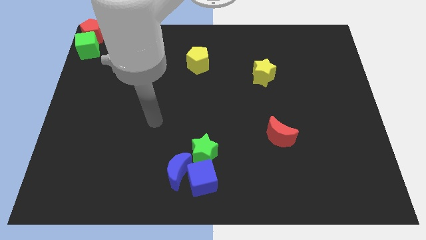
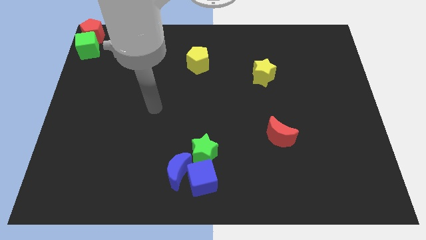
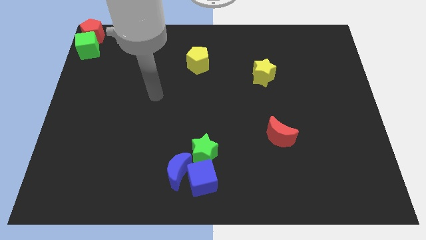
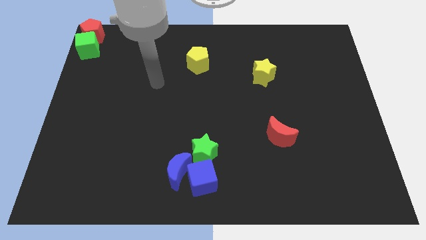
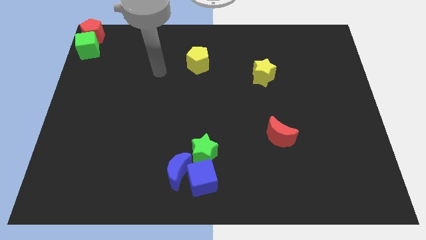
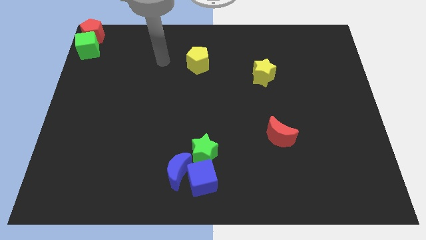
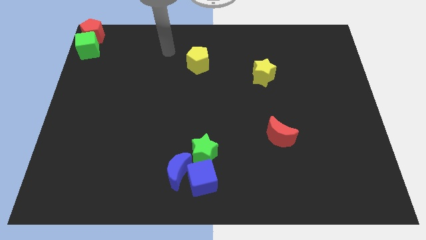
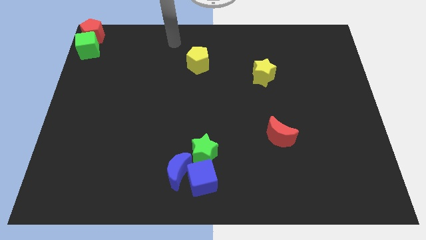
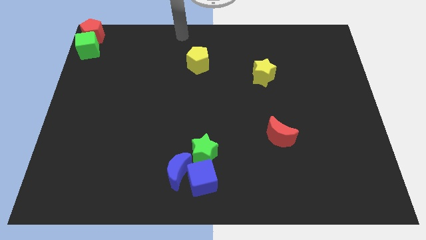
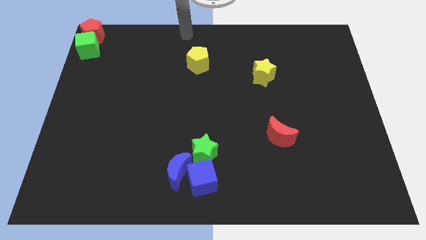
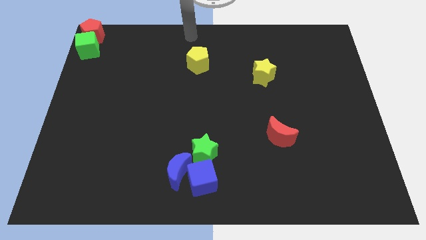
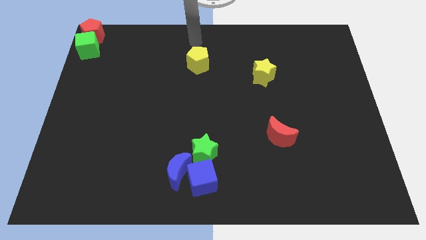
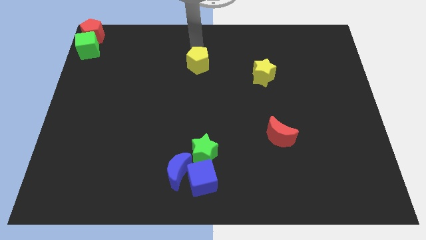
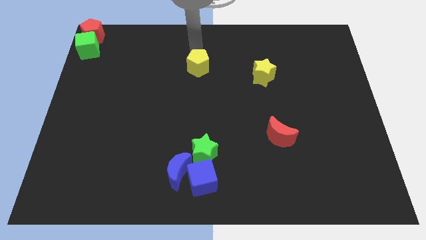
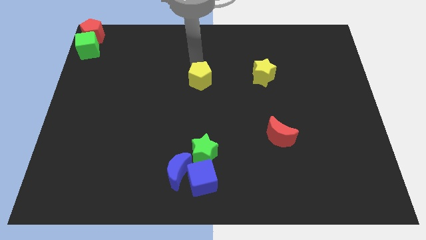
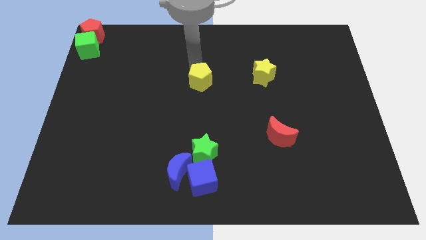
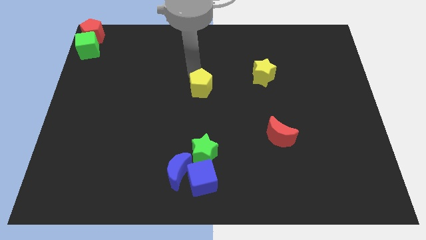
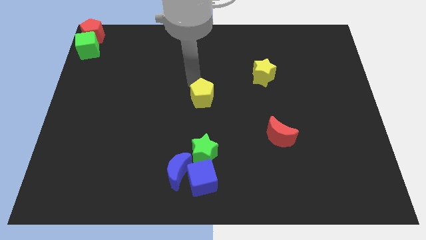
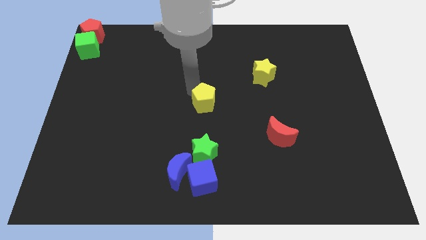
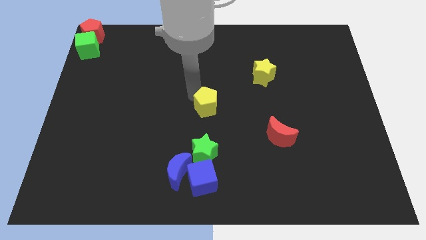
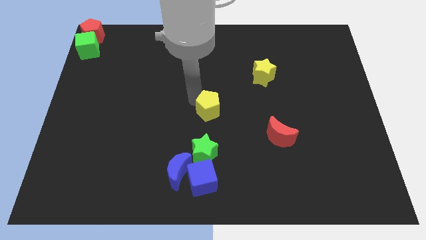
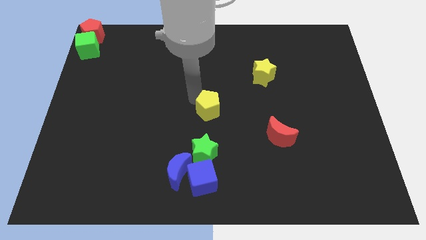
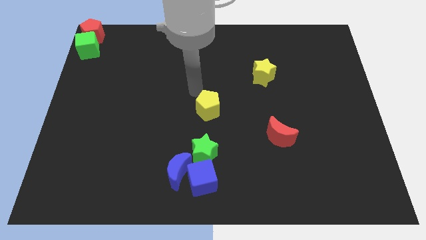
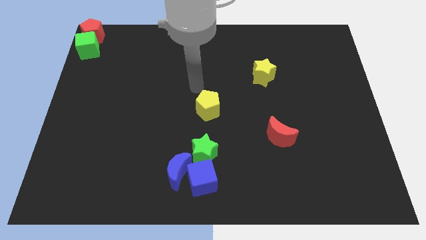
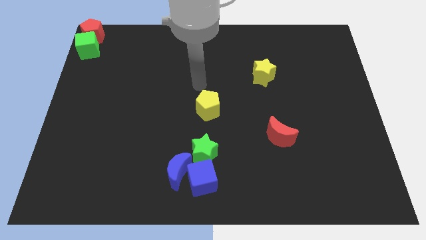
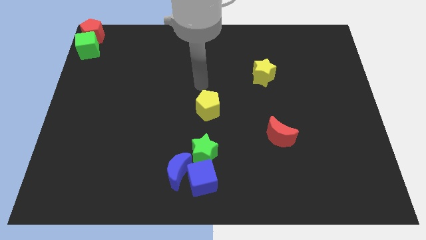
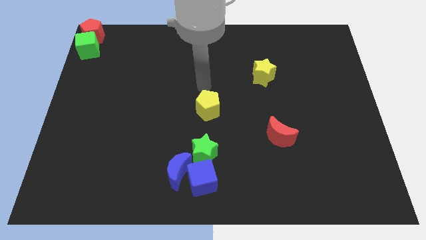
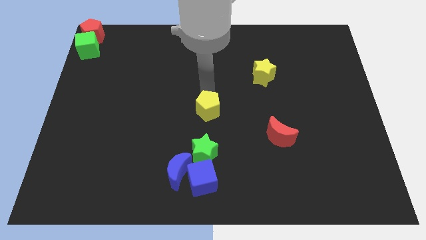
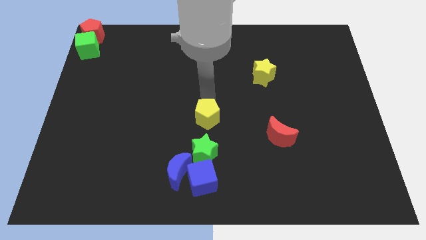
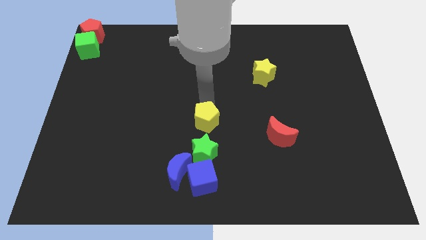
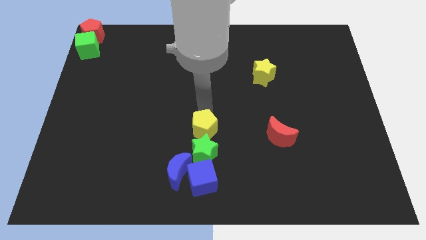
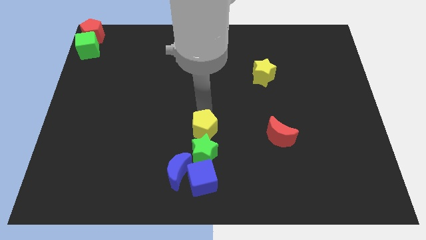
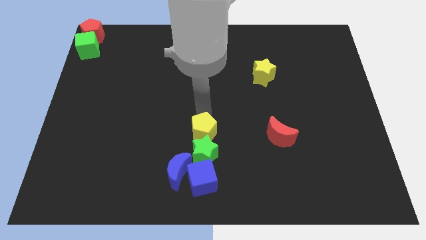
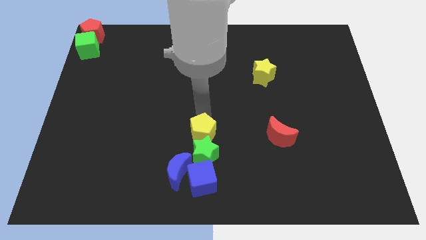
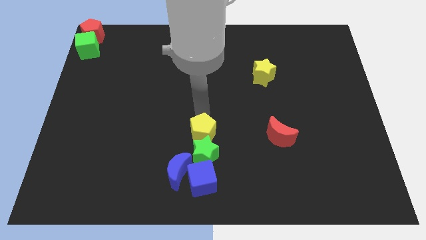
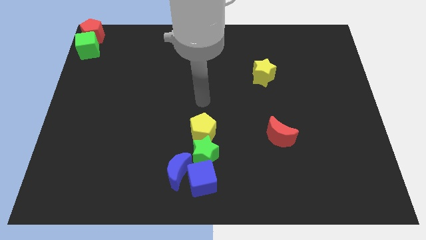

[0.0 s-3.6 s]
put the yellow pentagon to the top side of the green star

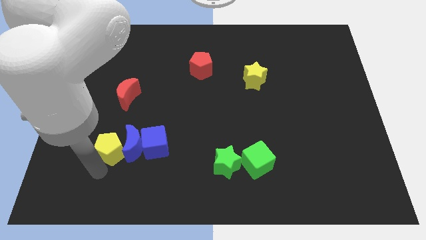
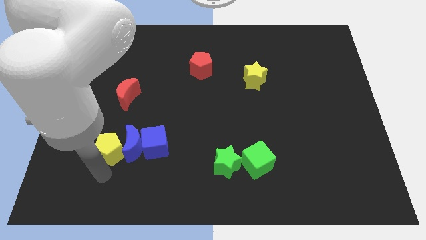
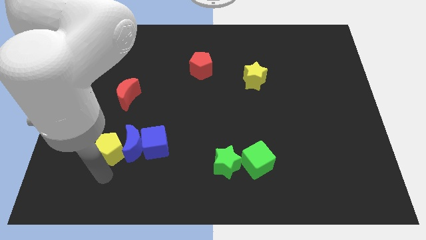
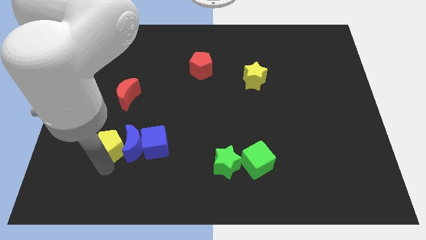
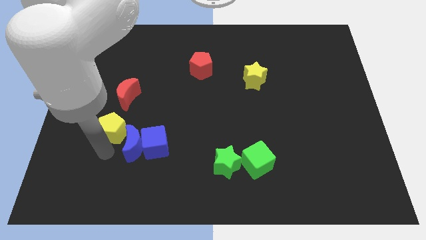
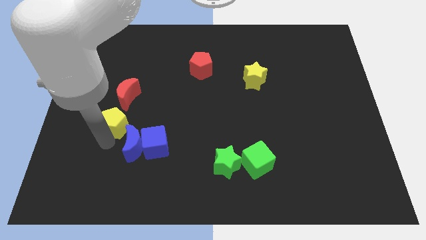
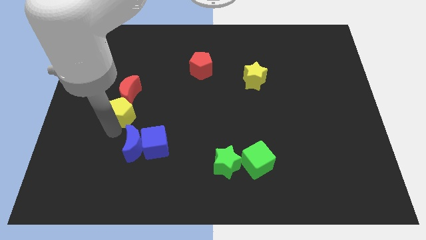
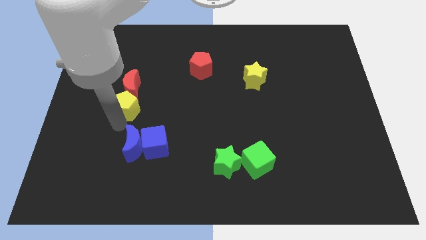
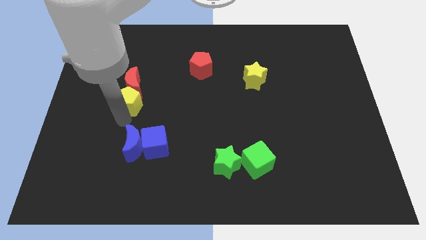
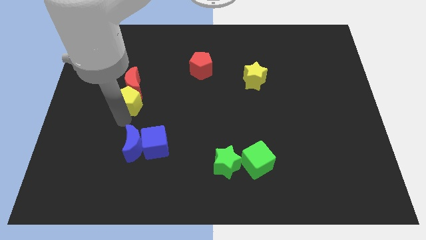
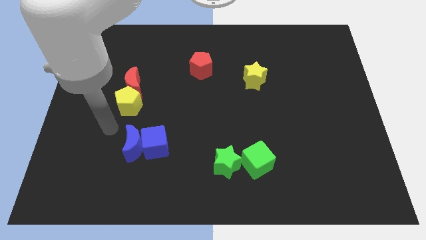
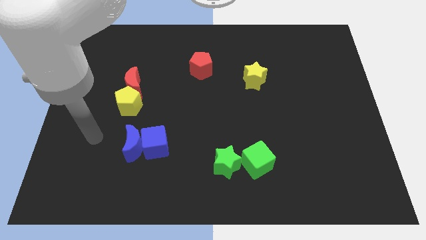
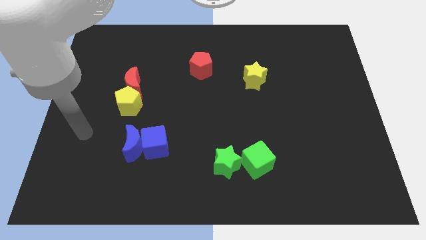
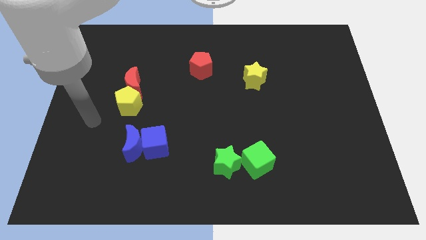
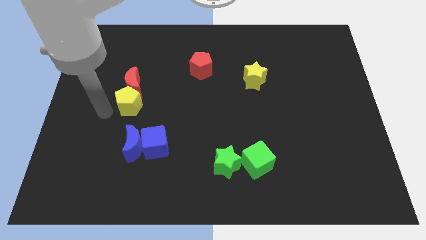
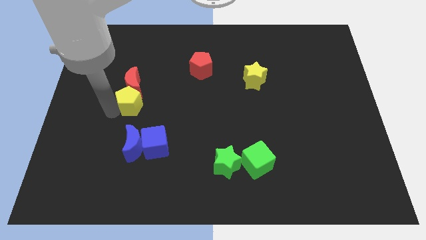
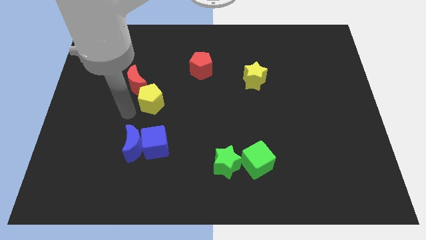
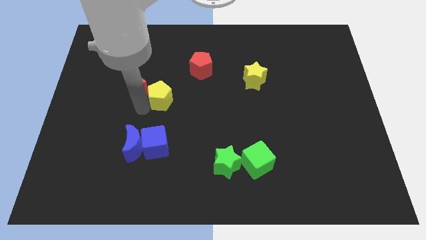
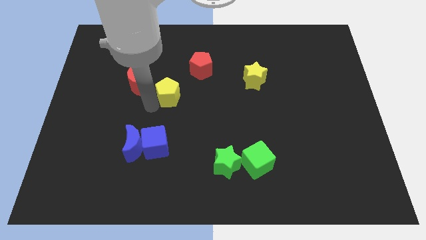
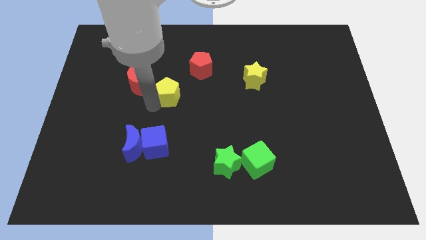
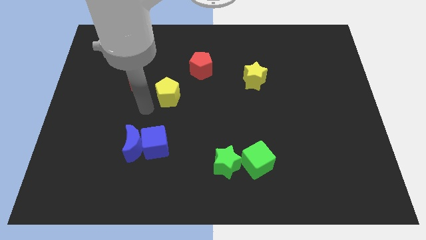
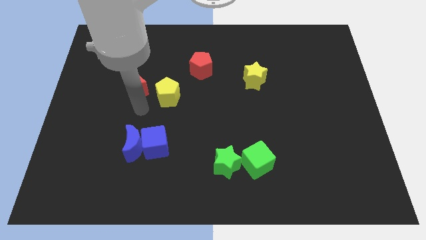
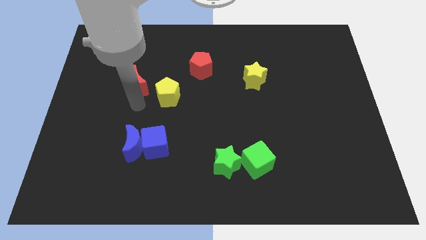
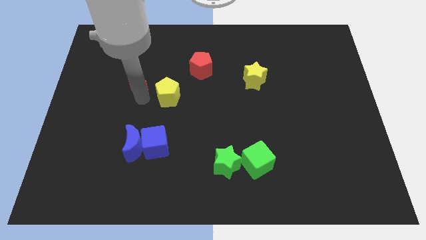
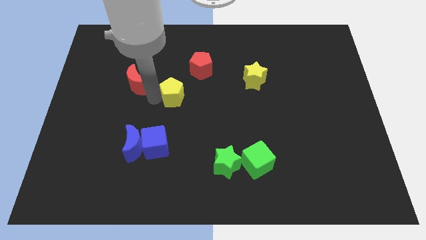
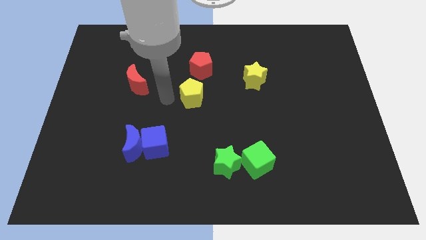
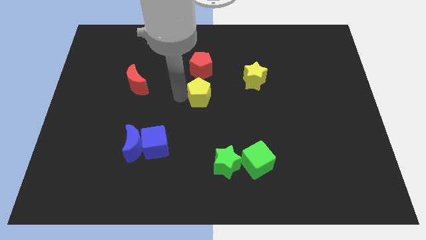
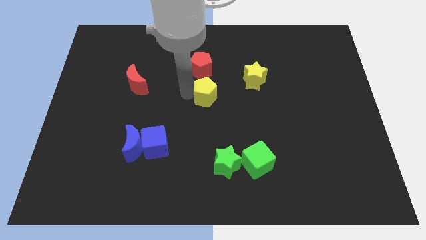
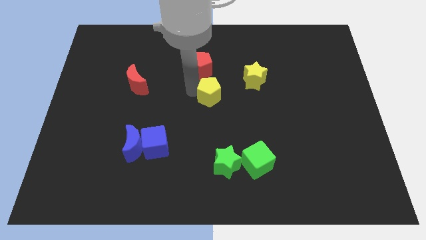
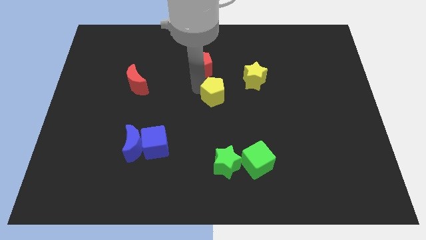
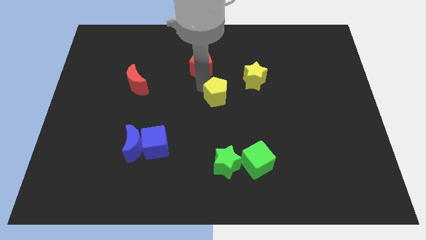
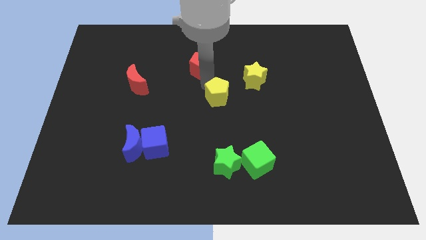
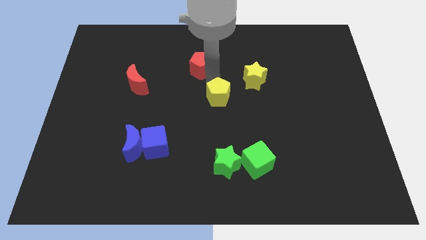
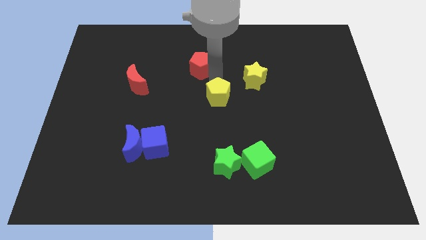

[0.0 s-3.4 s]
place the yellow pentagon vertically at the top side of the green star

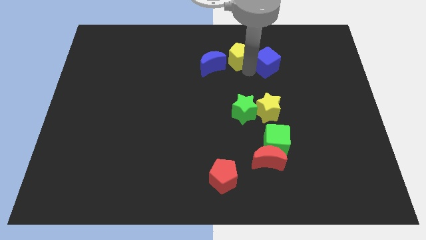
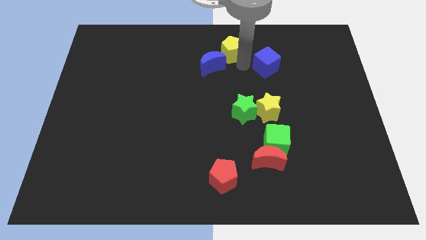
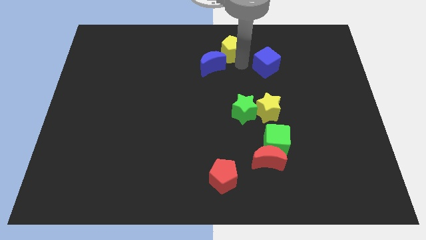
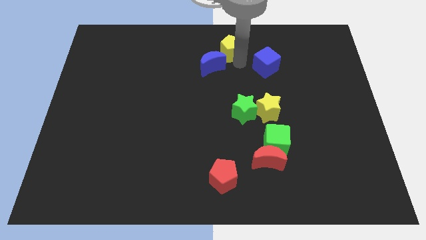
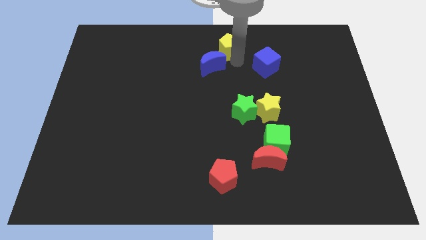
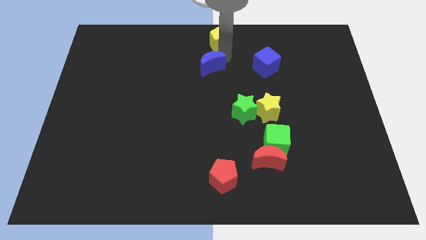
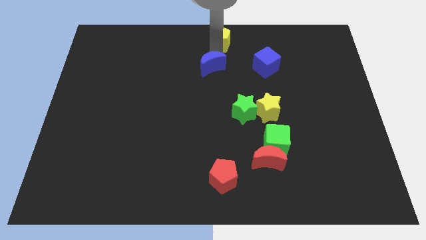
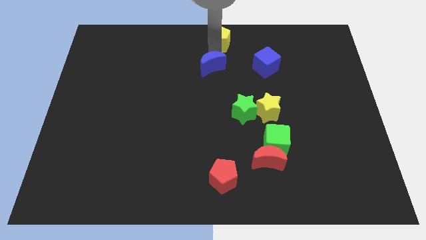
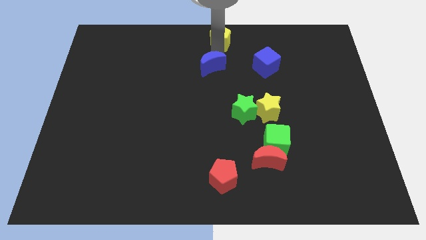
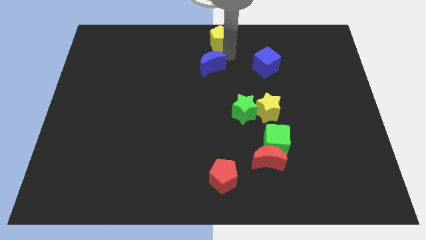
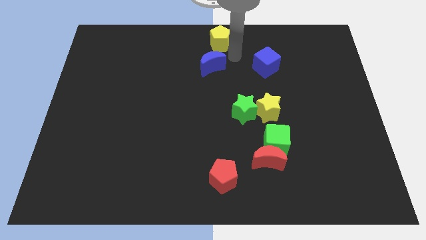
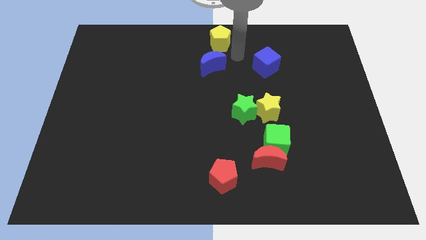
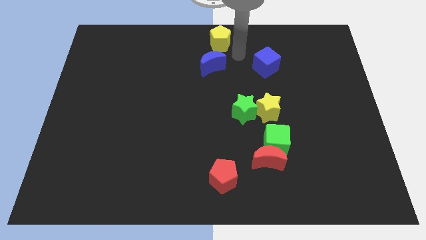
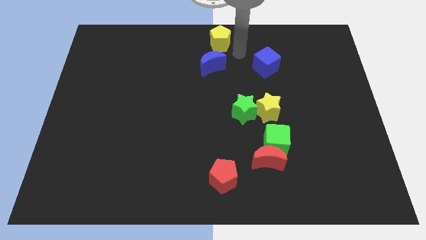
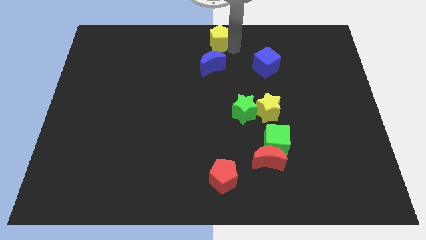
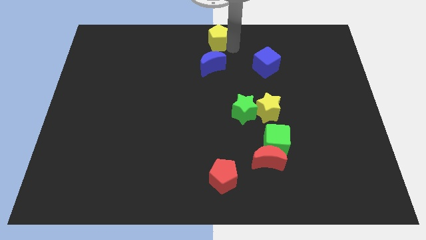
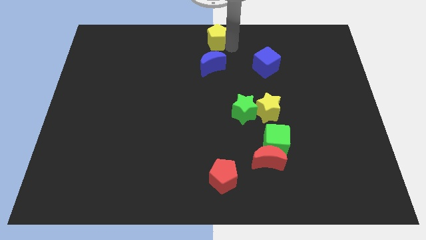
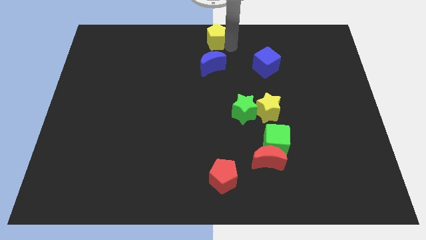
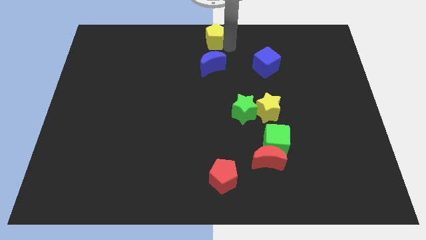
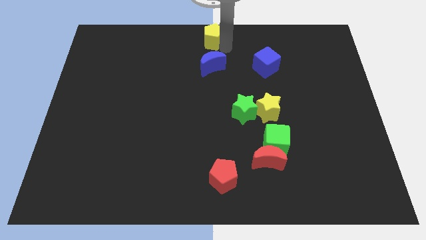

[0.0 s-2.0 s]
push the yellow pentagon towards the top center of the board
